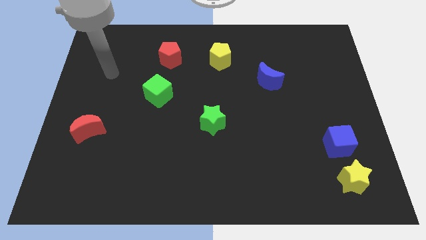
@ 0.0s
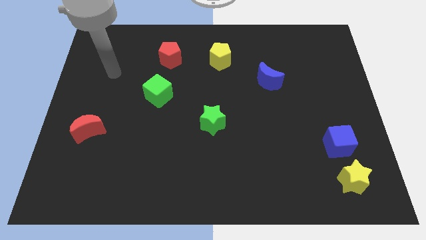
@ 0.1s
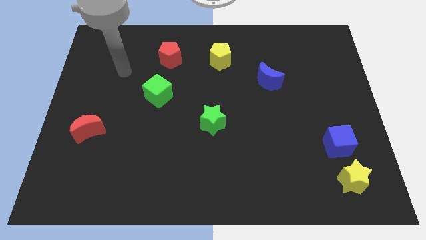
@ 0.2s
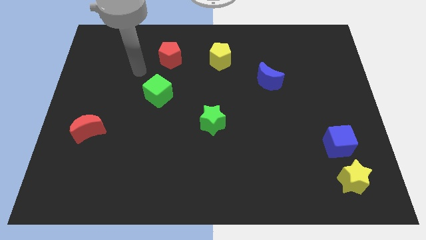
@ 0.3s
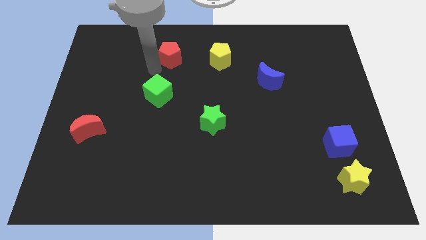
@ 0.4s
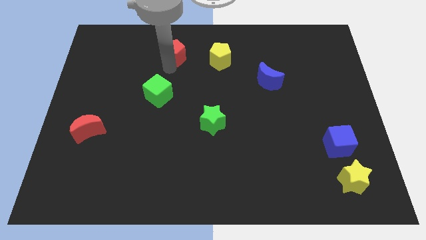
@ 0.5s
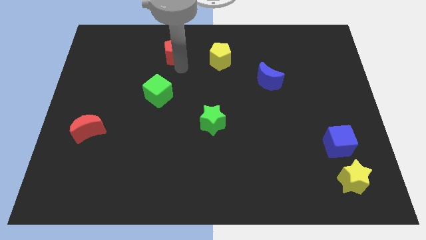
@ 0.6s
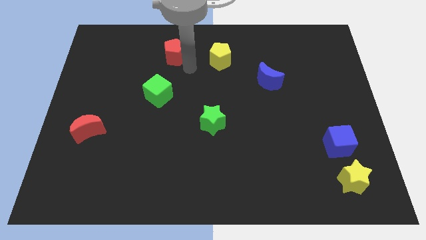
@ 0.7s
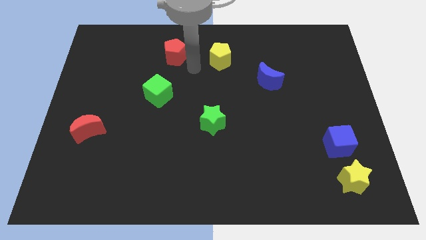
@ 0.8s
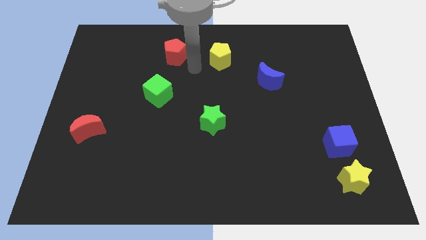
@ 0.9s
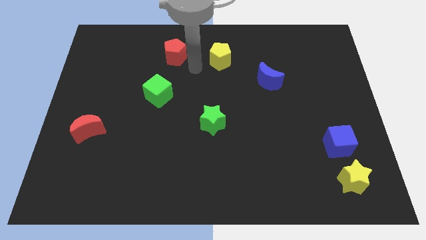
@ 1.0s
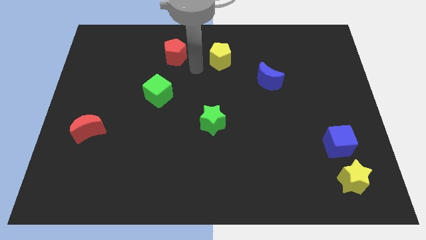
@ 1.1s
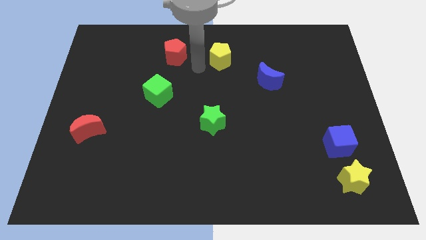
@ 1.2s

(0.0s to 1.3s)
point your arm in between the red pentagon and the yellow pentagon

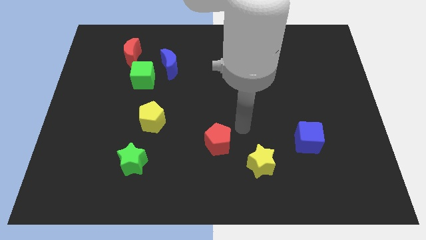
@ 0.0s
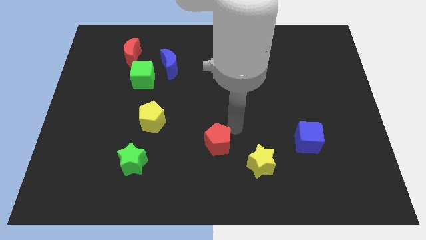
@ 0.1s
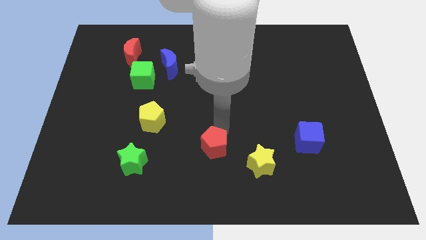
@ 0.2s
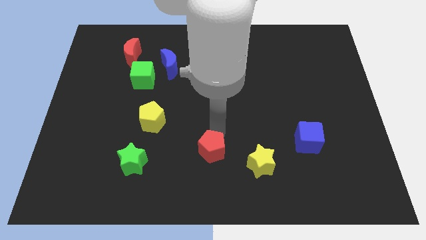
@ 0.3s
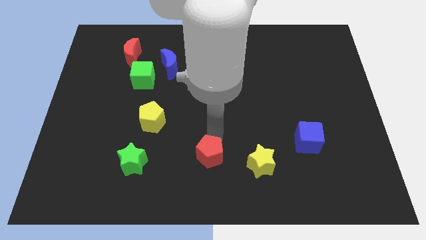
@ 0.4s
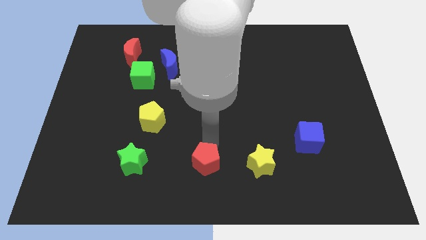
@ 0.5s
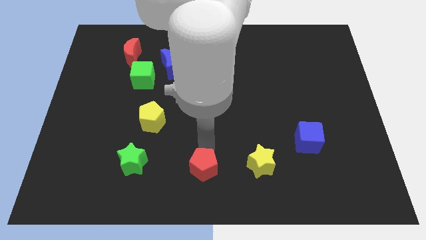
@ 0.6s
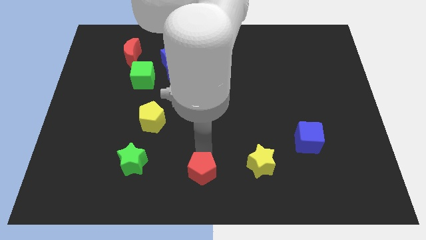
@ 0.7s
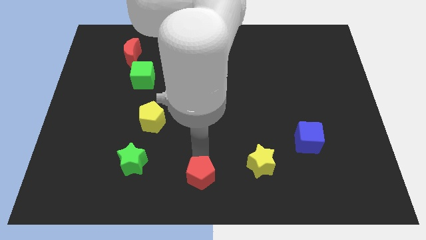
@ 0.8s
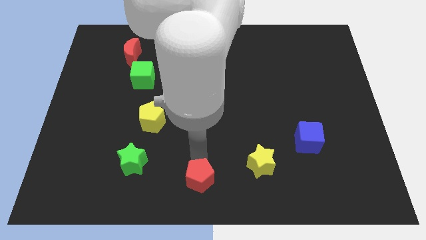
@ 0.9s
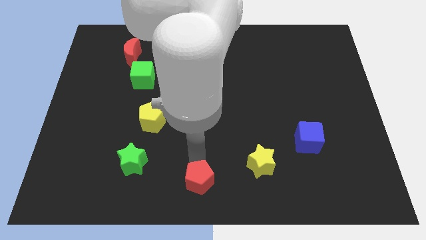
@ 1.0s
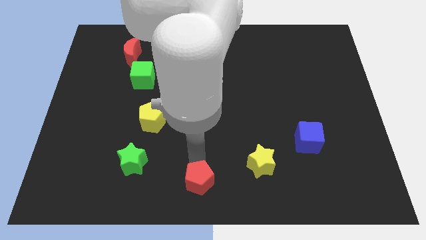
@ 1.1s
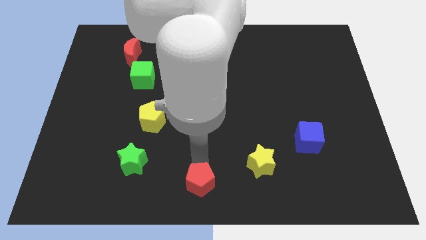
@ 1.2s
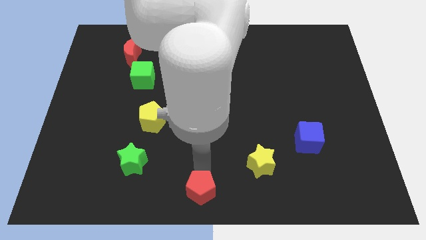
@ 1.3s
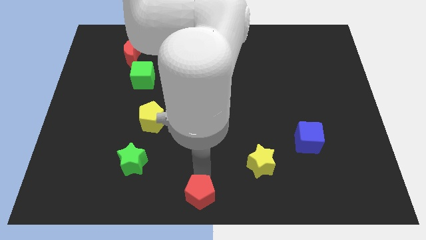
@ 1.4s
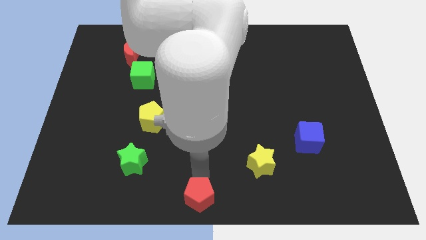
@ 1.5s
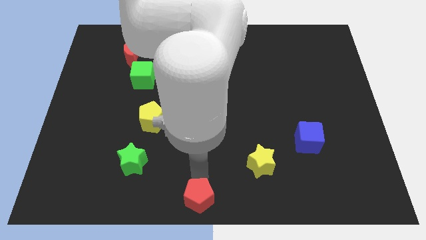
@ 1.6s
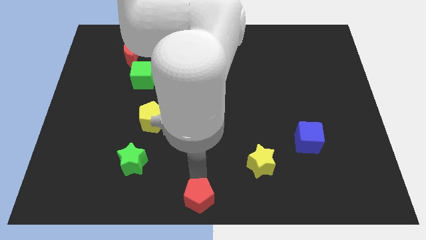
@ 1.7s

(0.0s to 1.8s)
push the red pentagon in the bottom center

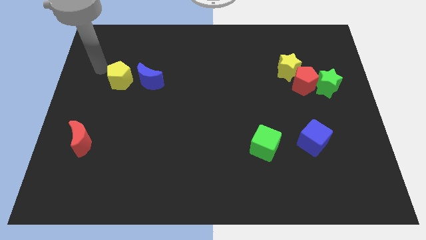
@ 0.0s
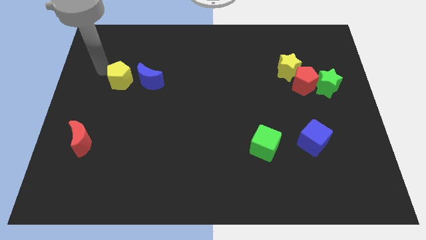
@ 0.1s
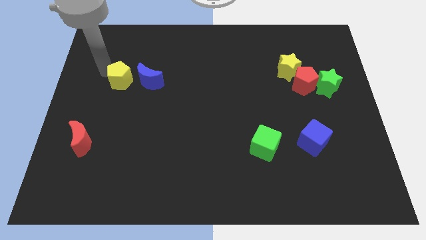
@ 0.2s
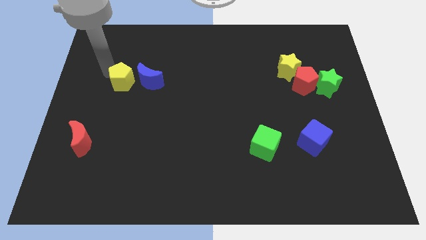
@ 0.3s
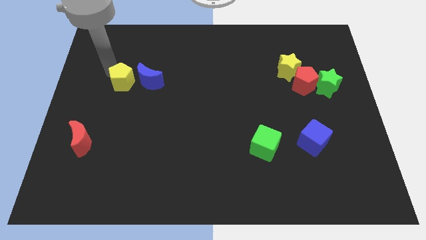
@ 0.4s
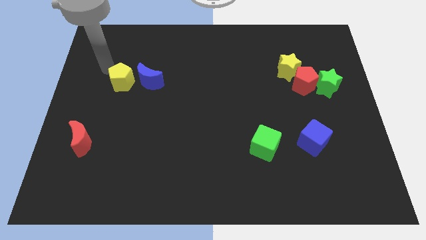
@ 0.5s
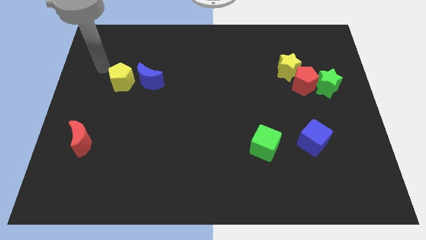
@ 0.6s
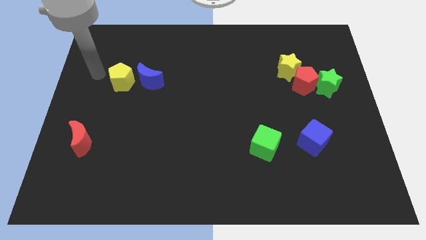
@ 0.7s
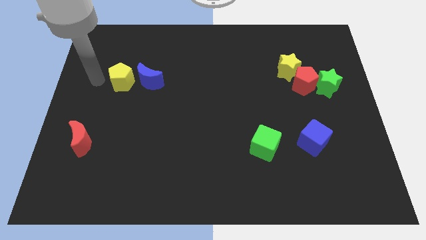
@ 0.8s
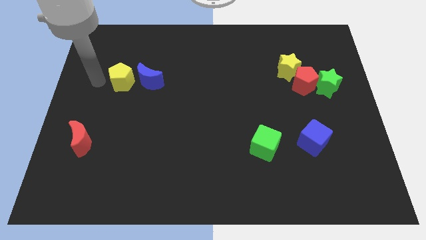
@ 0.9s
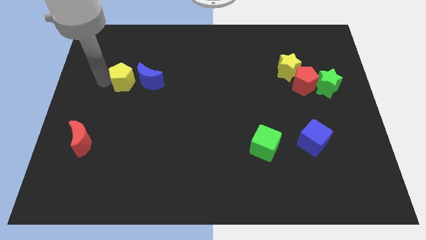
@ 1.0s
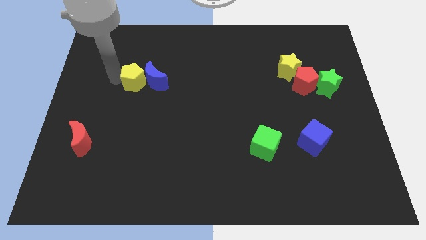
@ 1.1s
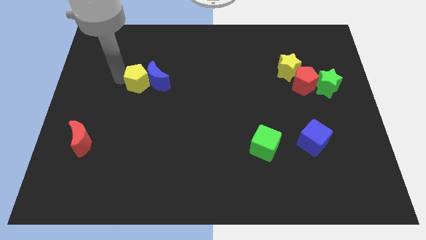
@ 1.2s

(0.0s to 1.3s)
push the yellow pentagon into the blue moon

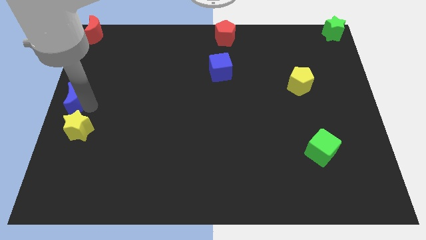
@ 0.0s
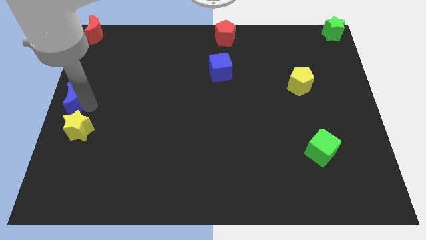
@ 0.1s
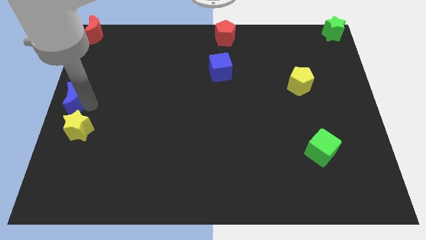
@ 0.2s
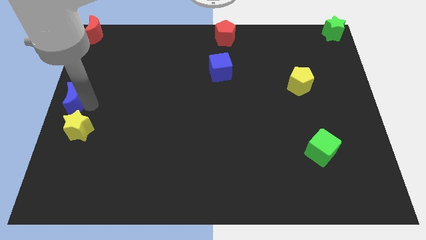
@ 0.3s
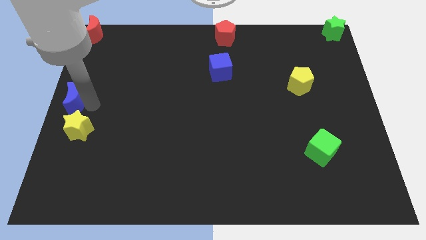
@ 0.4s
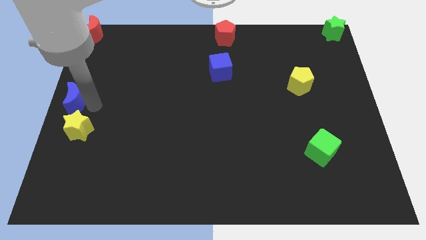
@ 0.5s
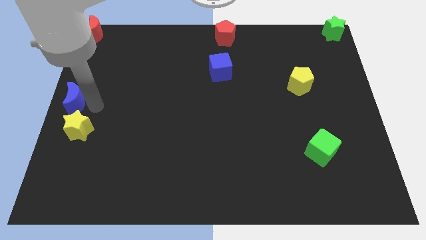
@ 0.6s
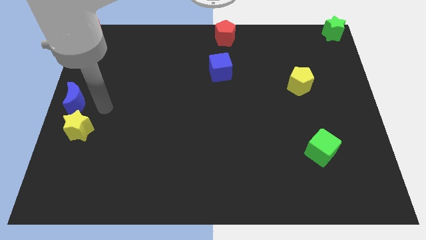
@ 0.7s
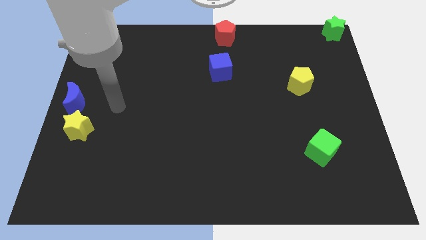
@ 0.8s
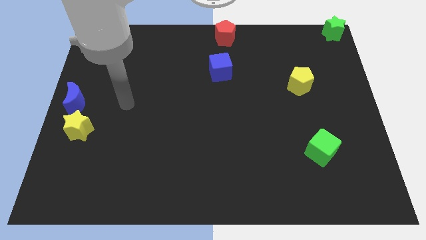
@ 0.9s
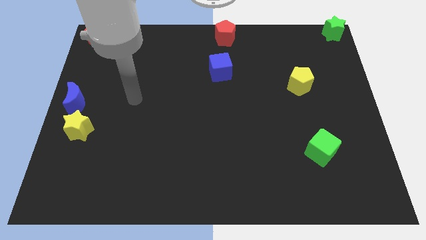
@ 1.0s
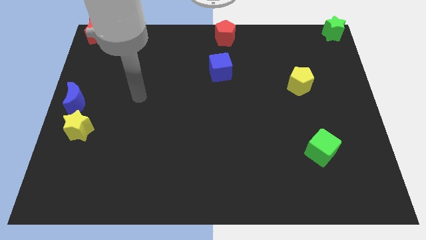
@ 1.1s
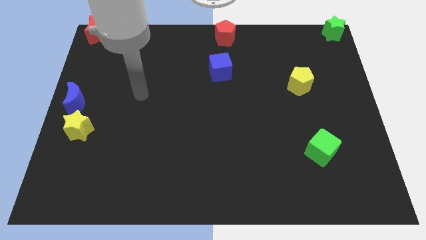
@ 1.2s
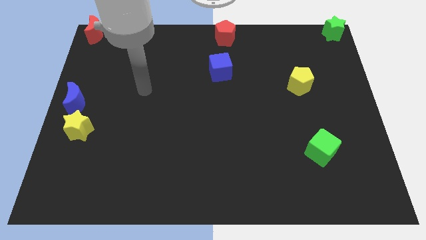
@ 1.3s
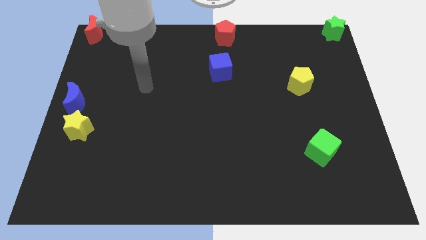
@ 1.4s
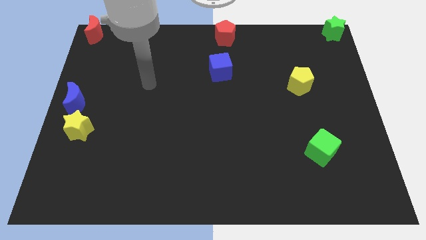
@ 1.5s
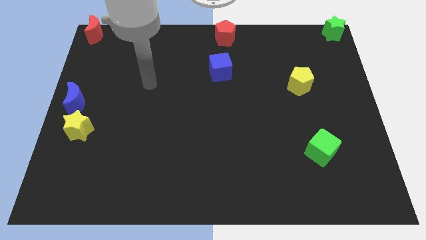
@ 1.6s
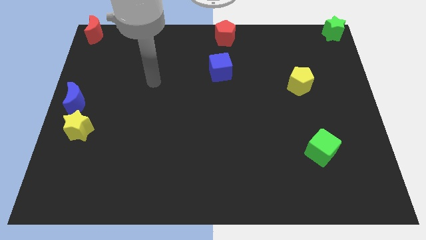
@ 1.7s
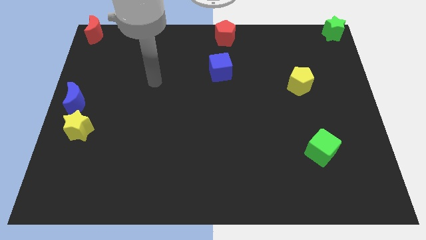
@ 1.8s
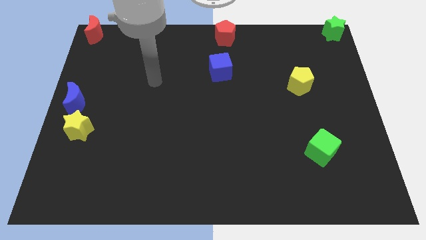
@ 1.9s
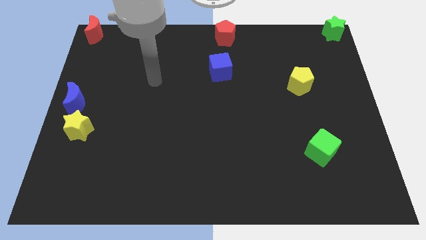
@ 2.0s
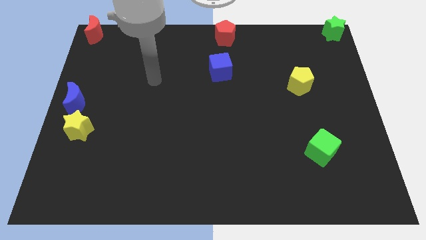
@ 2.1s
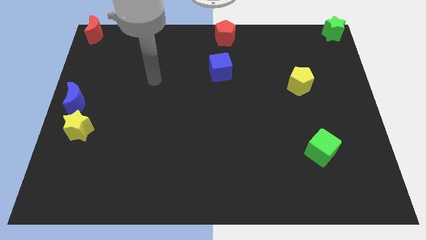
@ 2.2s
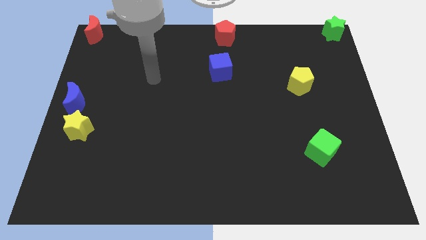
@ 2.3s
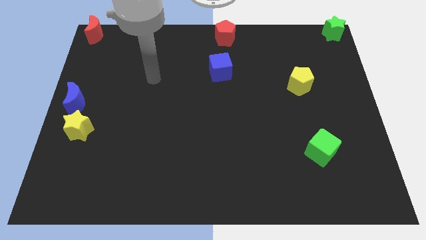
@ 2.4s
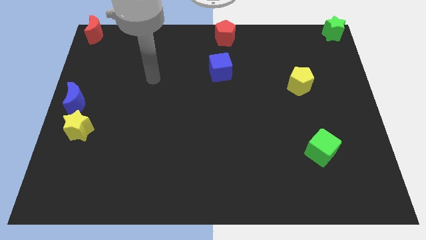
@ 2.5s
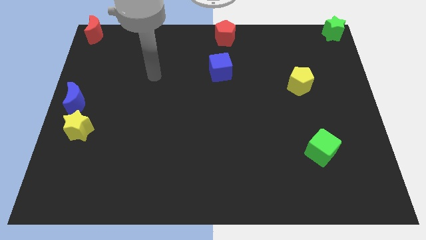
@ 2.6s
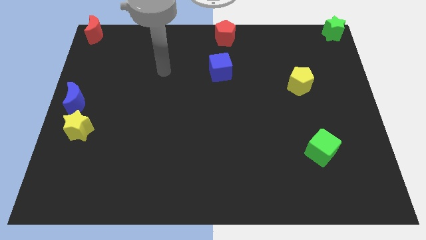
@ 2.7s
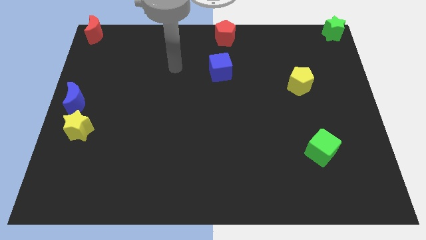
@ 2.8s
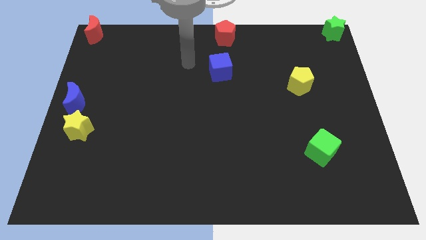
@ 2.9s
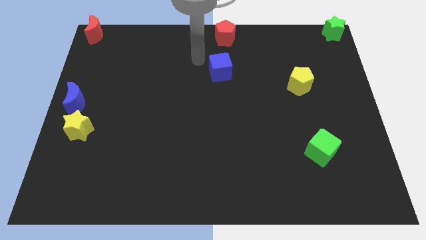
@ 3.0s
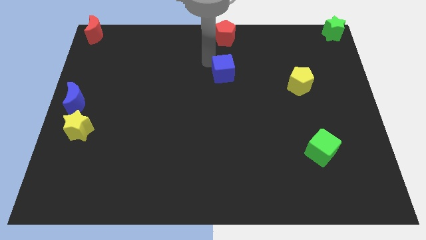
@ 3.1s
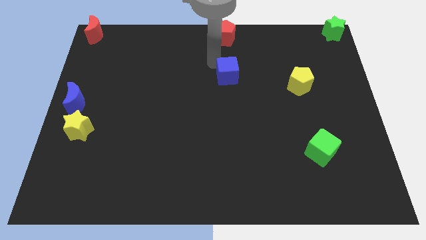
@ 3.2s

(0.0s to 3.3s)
move the arm to the blue cube

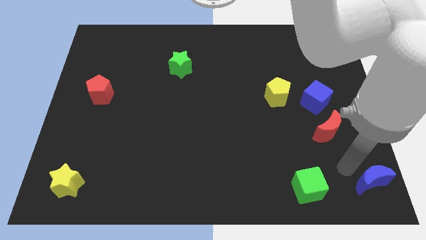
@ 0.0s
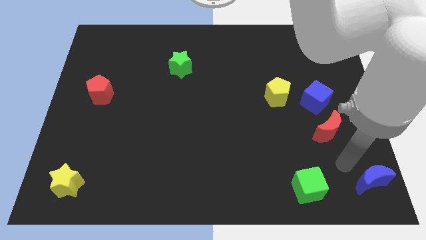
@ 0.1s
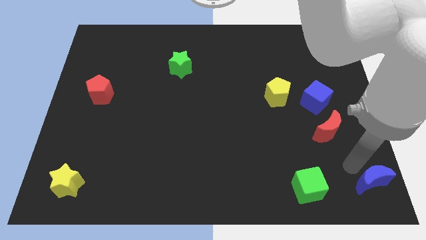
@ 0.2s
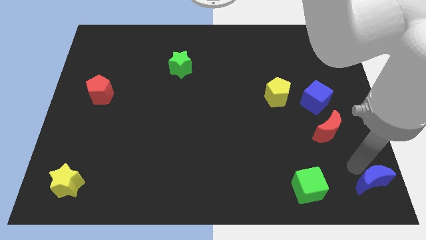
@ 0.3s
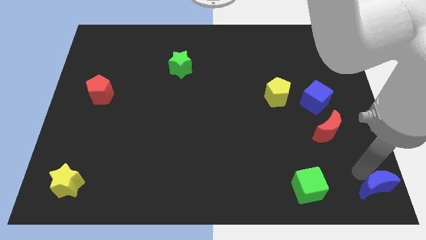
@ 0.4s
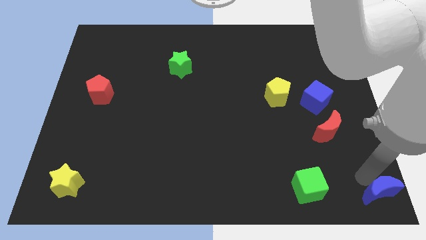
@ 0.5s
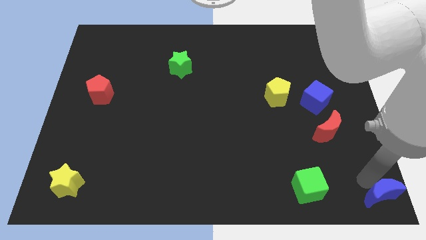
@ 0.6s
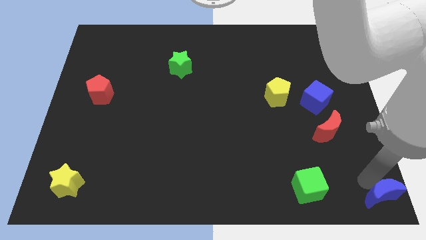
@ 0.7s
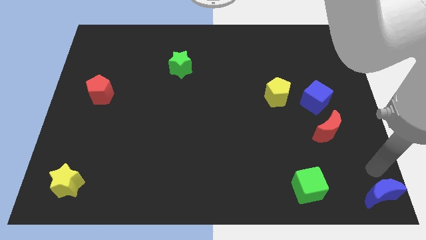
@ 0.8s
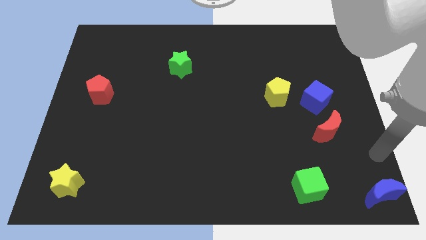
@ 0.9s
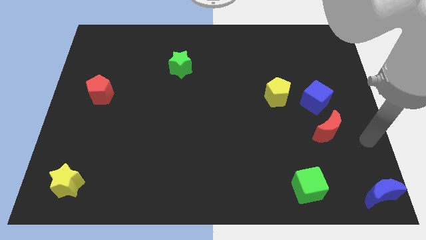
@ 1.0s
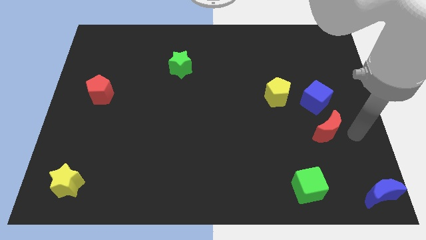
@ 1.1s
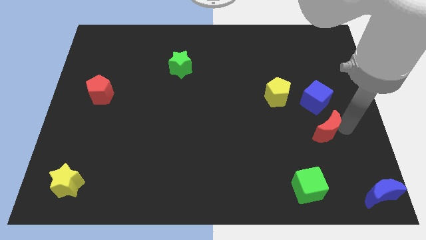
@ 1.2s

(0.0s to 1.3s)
push blue moon towards bottom right corner of the board
